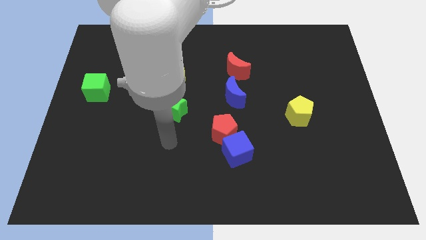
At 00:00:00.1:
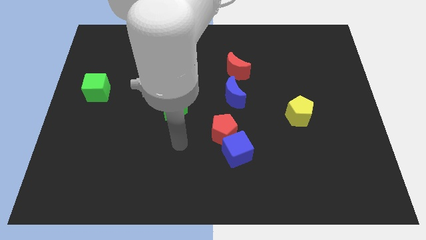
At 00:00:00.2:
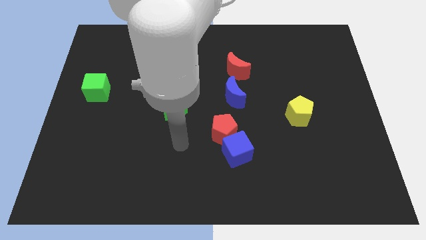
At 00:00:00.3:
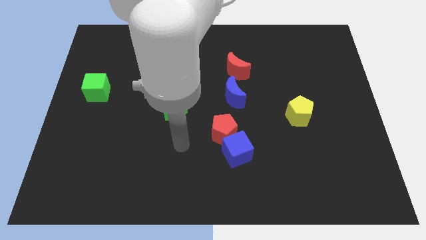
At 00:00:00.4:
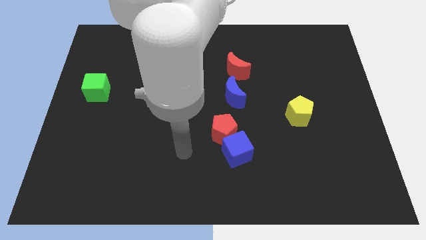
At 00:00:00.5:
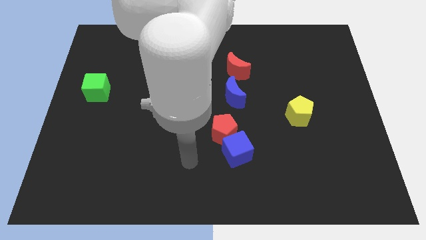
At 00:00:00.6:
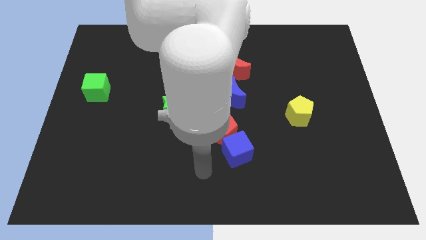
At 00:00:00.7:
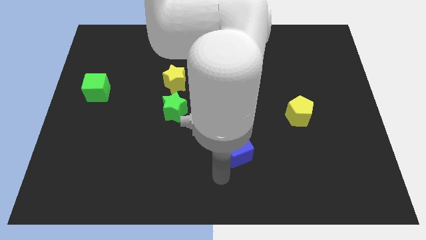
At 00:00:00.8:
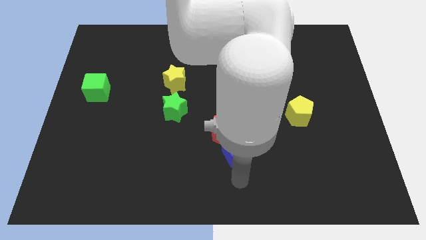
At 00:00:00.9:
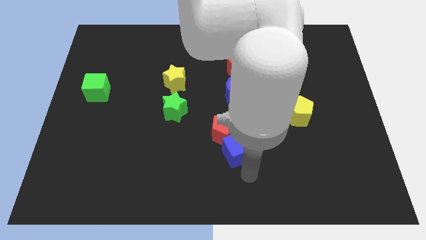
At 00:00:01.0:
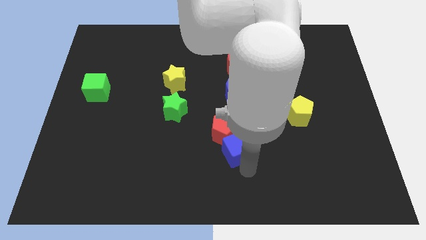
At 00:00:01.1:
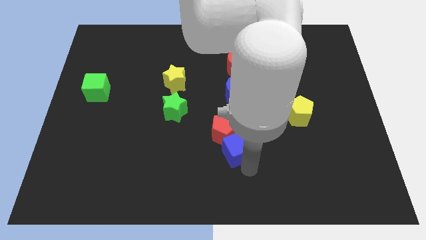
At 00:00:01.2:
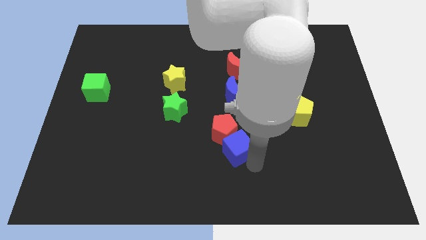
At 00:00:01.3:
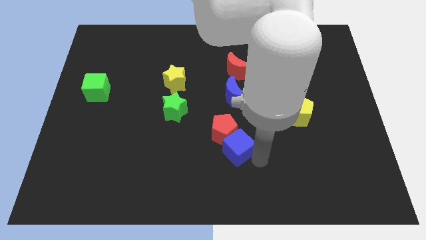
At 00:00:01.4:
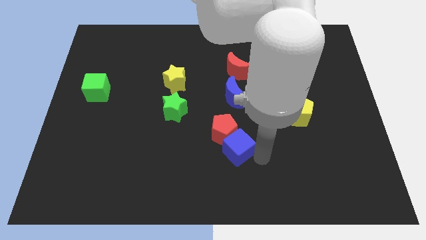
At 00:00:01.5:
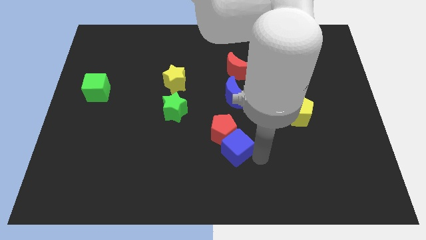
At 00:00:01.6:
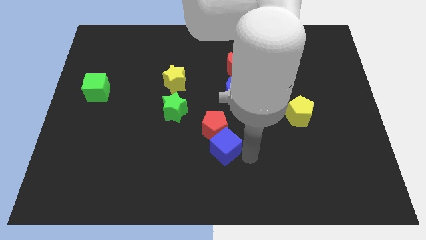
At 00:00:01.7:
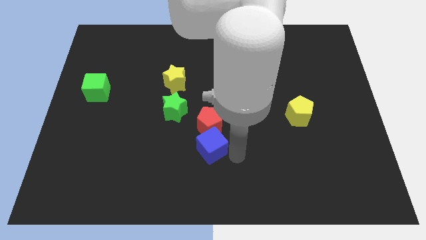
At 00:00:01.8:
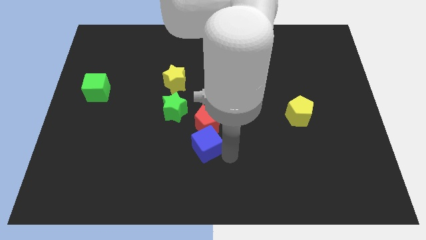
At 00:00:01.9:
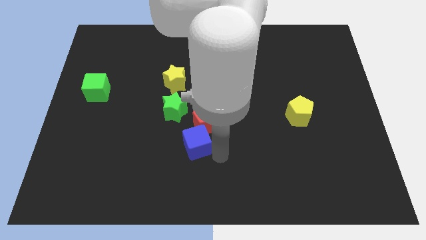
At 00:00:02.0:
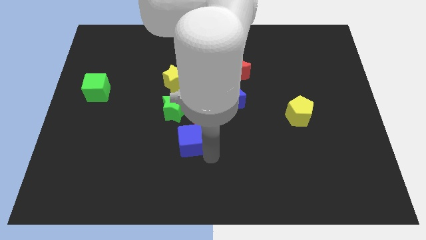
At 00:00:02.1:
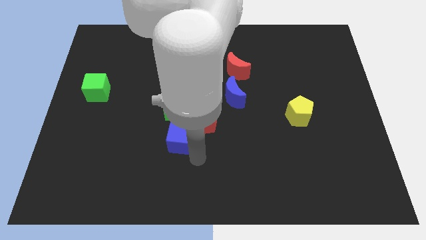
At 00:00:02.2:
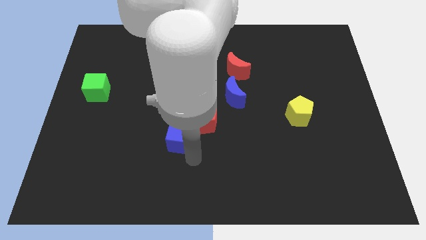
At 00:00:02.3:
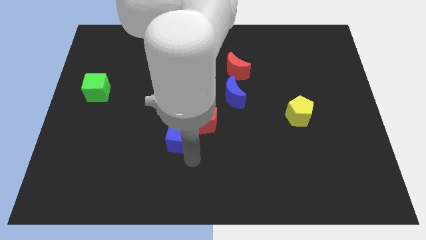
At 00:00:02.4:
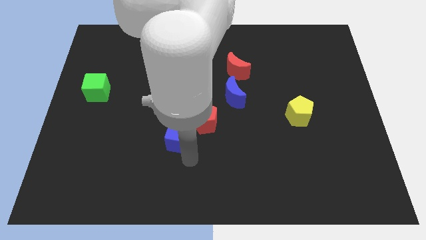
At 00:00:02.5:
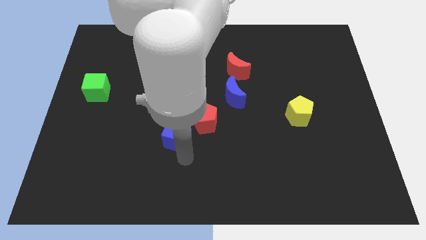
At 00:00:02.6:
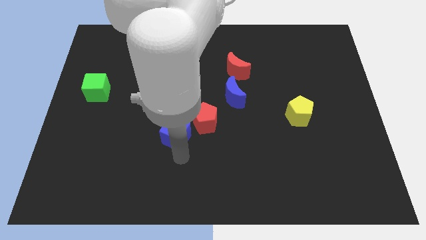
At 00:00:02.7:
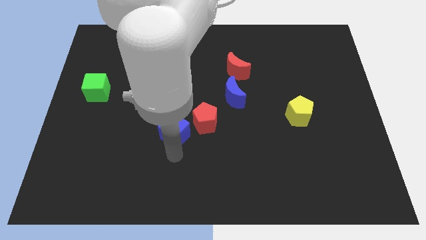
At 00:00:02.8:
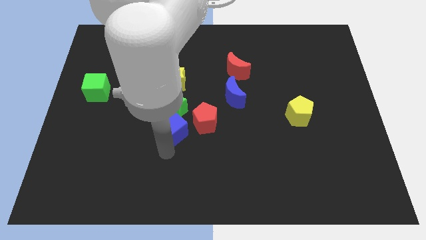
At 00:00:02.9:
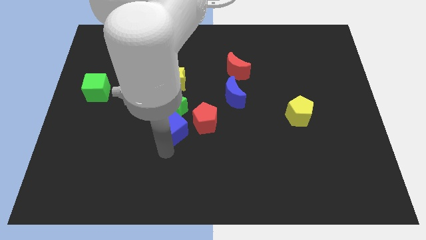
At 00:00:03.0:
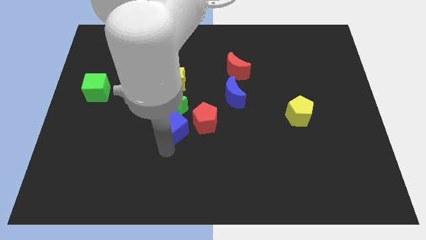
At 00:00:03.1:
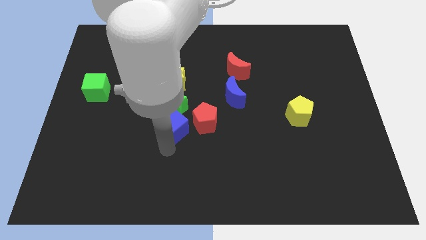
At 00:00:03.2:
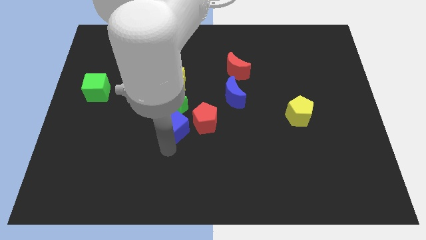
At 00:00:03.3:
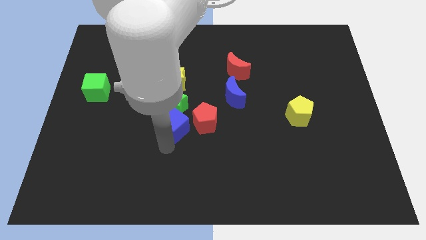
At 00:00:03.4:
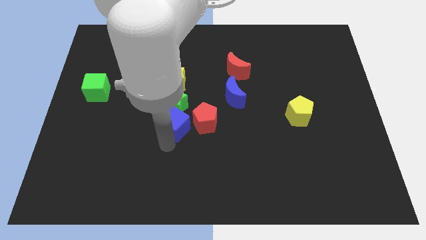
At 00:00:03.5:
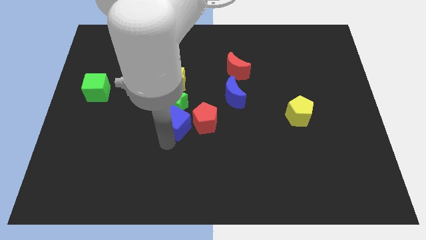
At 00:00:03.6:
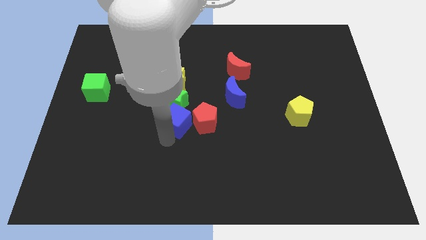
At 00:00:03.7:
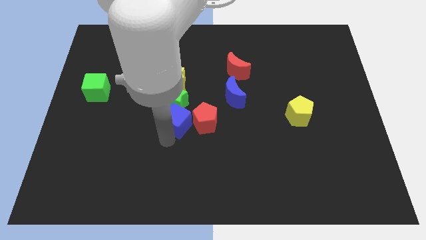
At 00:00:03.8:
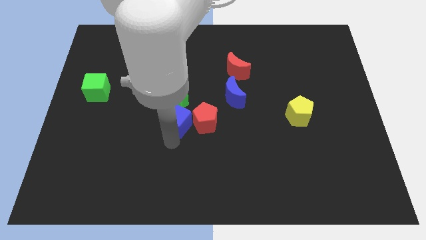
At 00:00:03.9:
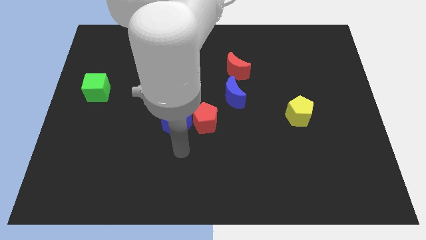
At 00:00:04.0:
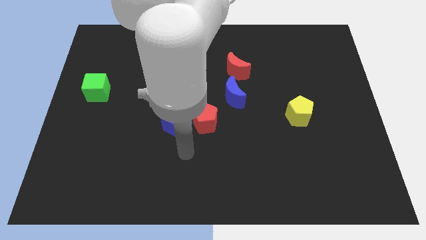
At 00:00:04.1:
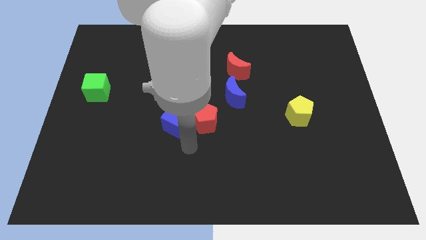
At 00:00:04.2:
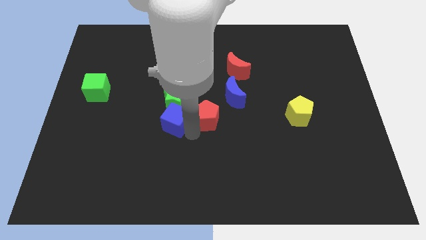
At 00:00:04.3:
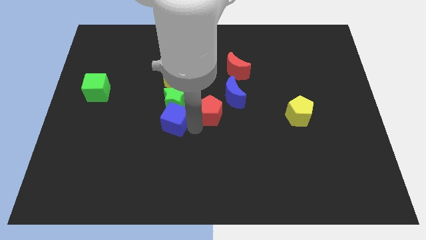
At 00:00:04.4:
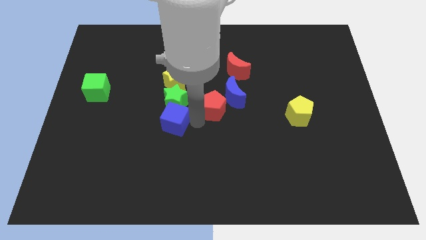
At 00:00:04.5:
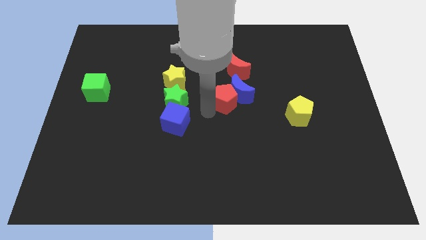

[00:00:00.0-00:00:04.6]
push the blue cube into the green star

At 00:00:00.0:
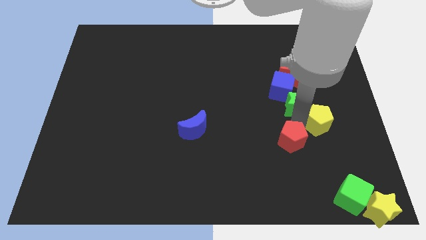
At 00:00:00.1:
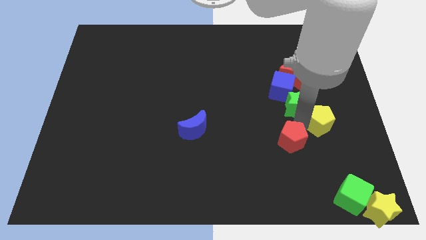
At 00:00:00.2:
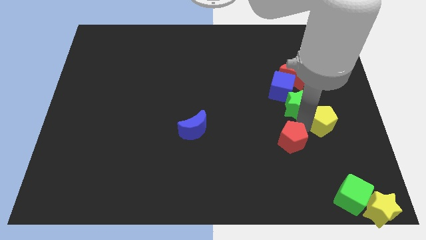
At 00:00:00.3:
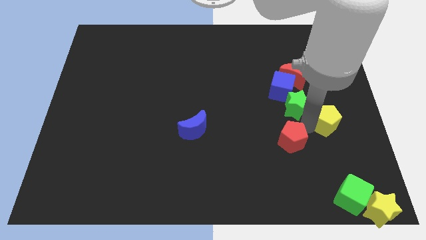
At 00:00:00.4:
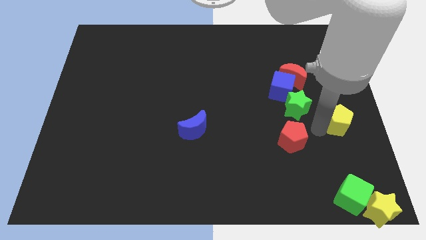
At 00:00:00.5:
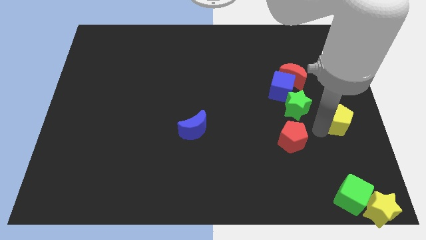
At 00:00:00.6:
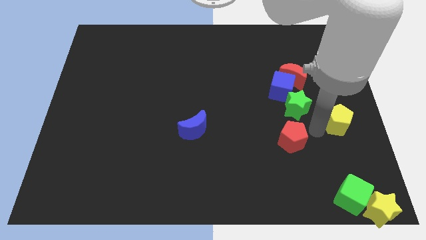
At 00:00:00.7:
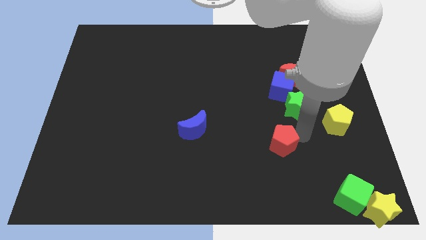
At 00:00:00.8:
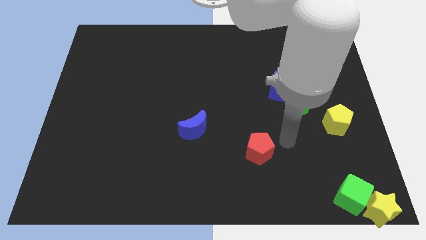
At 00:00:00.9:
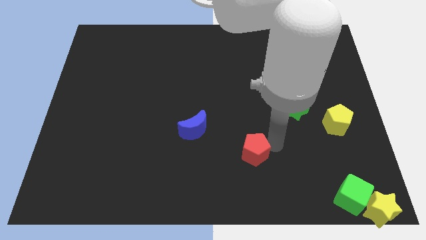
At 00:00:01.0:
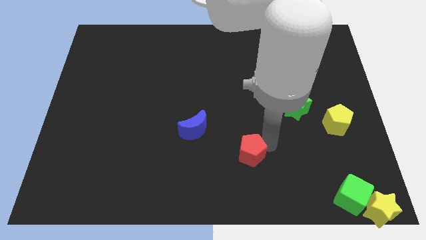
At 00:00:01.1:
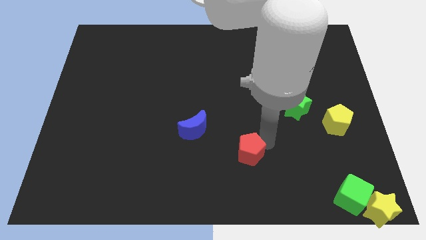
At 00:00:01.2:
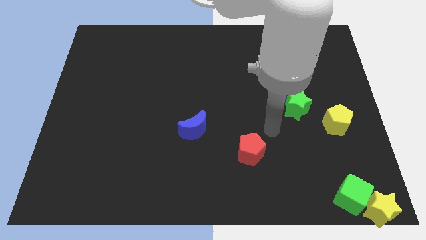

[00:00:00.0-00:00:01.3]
separate the both pentagons

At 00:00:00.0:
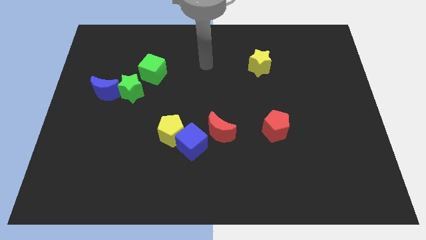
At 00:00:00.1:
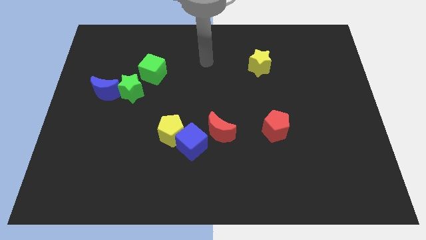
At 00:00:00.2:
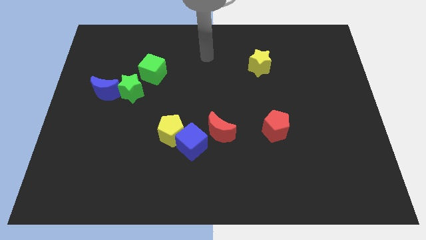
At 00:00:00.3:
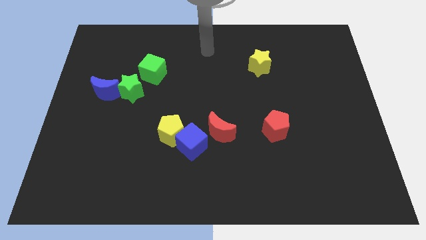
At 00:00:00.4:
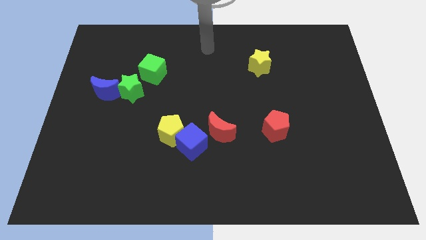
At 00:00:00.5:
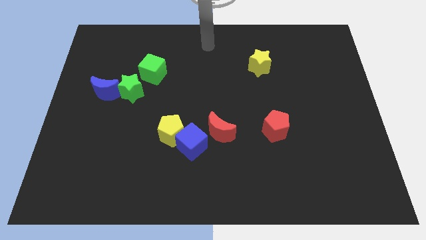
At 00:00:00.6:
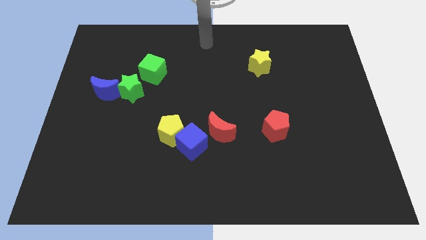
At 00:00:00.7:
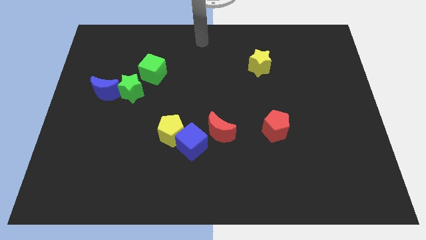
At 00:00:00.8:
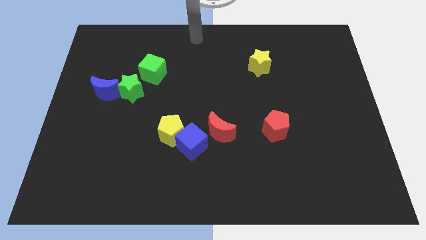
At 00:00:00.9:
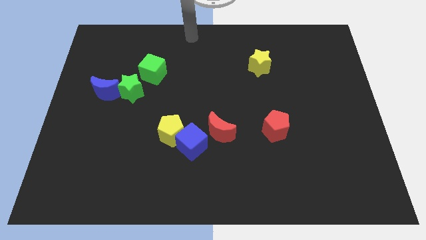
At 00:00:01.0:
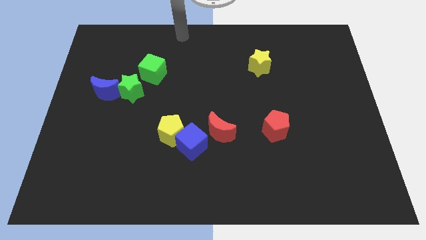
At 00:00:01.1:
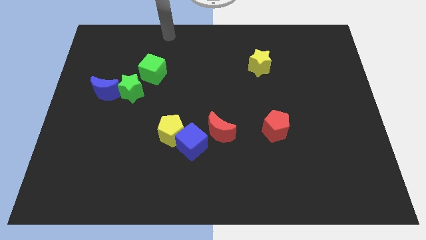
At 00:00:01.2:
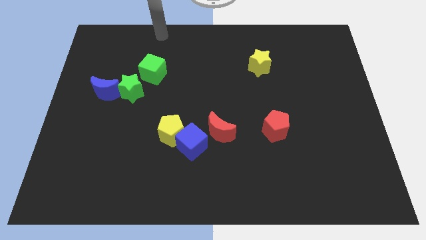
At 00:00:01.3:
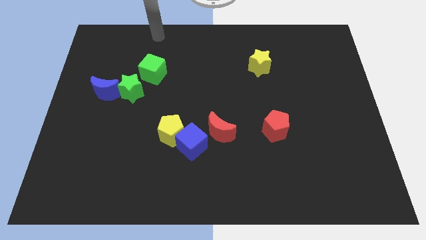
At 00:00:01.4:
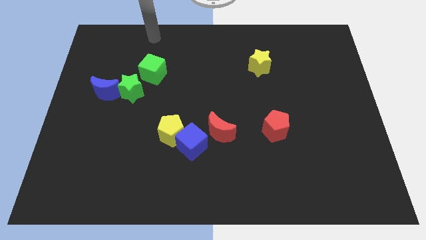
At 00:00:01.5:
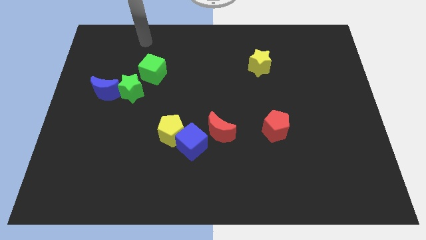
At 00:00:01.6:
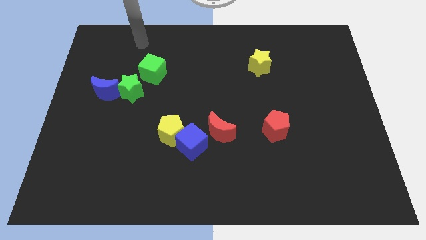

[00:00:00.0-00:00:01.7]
place your arm at the top of the green cube

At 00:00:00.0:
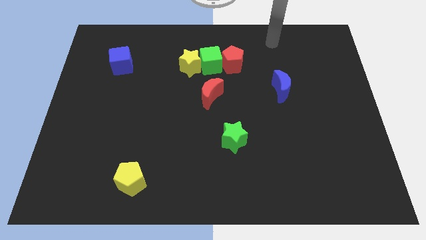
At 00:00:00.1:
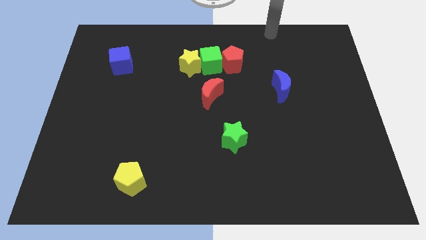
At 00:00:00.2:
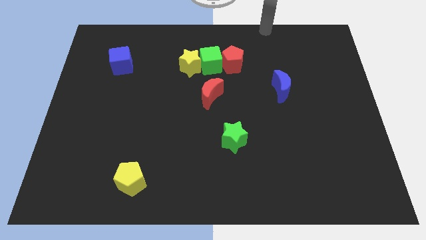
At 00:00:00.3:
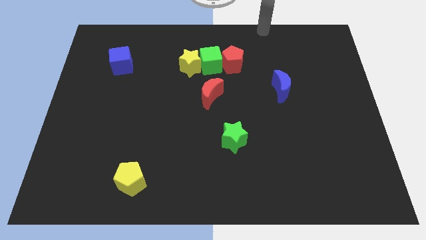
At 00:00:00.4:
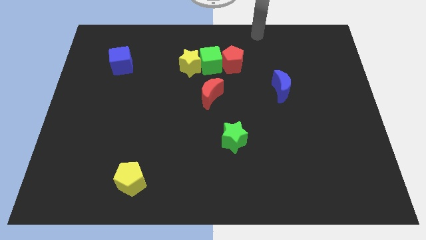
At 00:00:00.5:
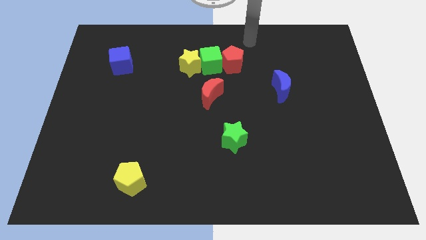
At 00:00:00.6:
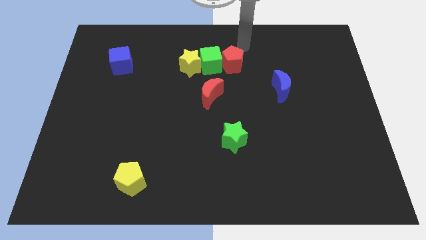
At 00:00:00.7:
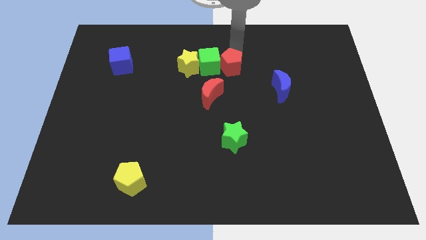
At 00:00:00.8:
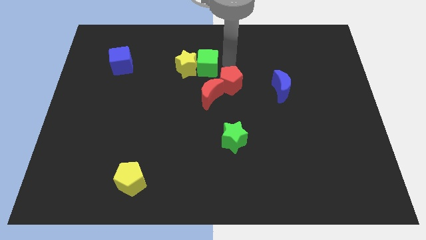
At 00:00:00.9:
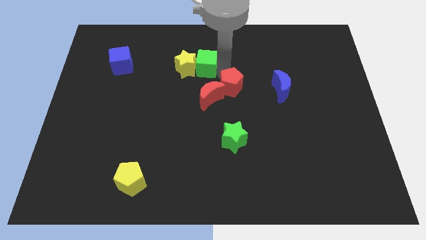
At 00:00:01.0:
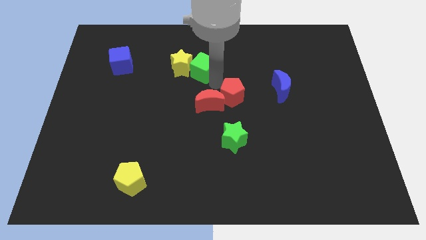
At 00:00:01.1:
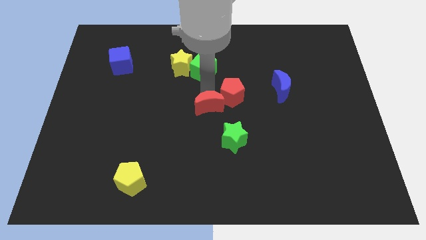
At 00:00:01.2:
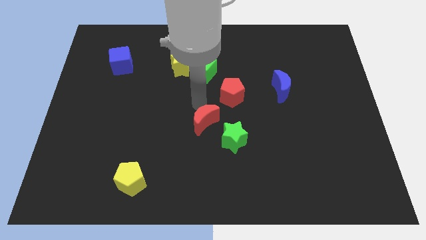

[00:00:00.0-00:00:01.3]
push the red pentagon into the red moon
